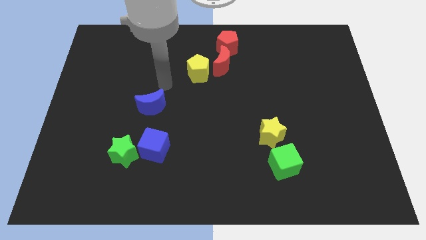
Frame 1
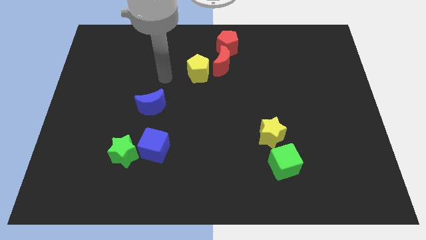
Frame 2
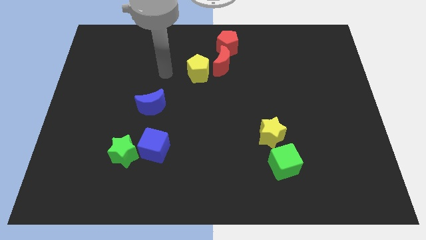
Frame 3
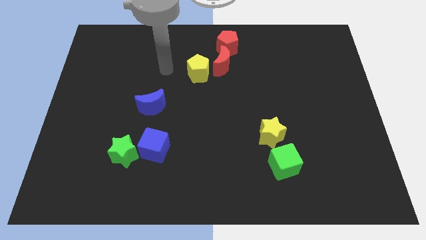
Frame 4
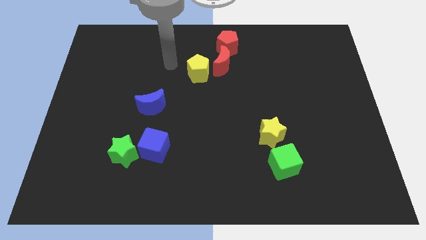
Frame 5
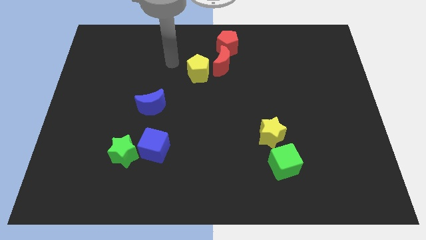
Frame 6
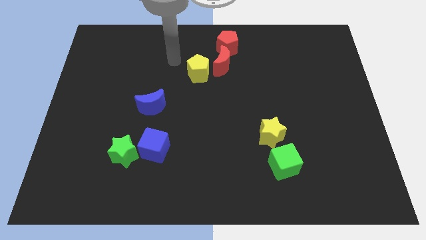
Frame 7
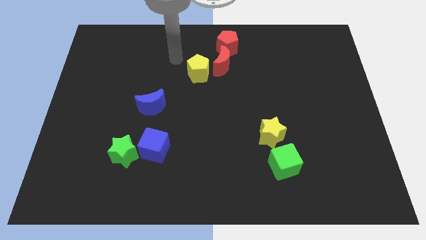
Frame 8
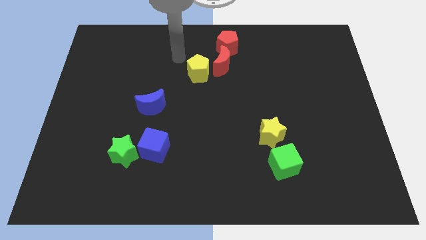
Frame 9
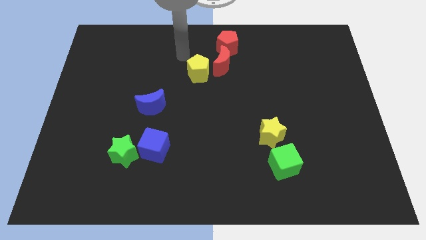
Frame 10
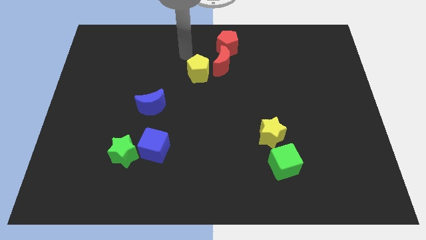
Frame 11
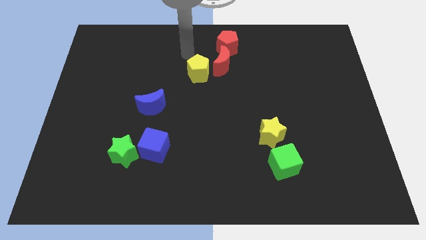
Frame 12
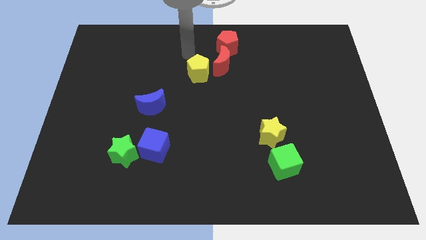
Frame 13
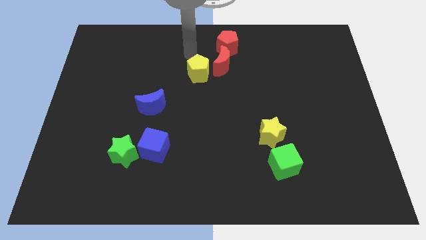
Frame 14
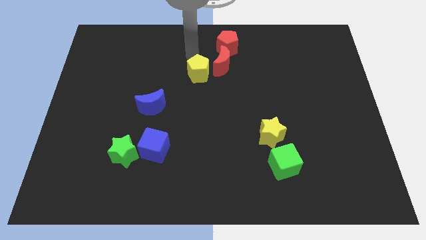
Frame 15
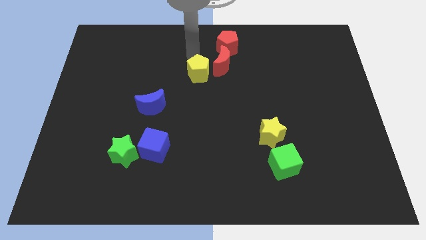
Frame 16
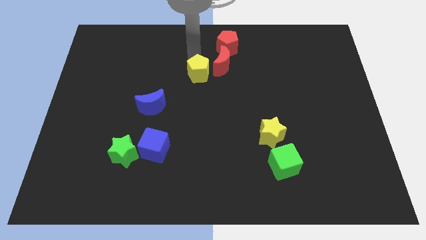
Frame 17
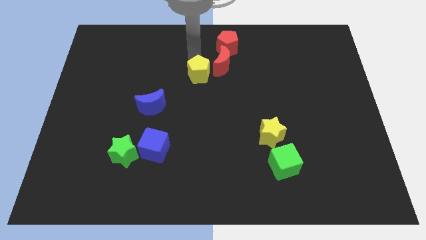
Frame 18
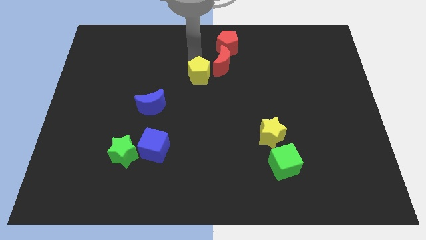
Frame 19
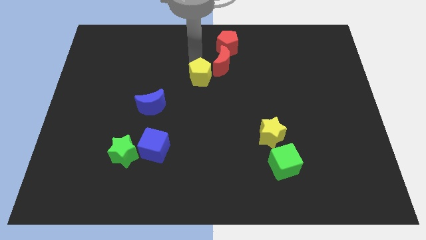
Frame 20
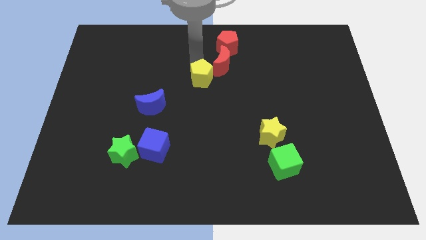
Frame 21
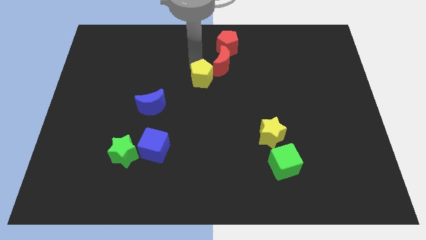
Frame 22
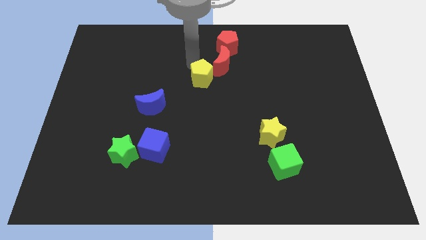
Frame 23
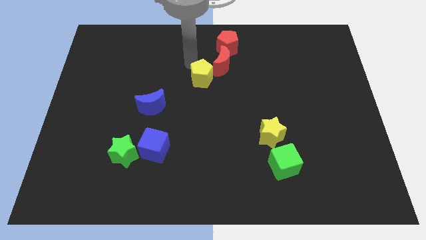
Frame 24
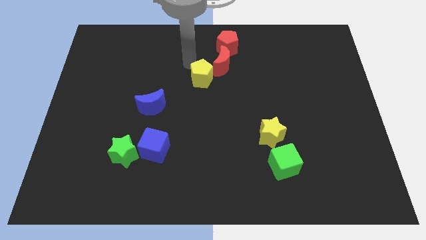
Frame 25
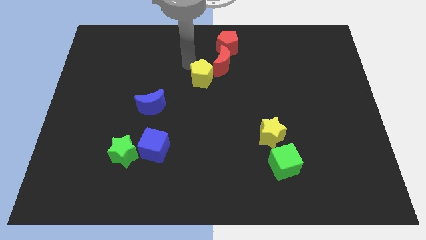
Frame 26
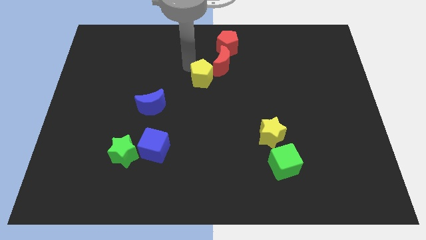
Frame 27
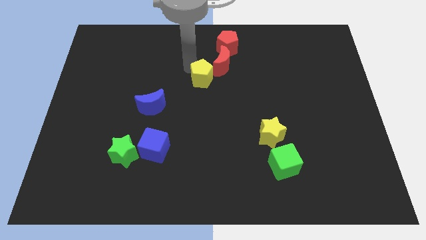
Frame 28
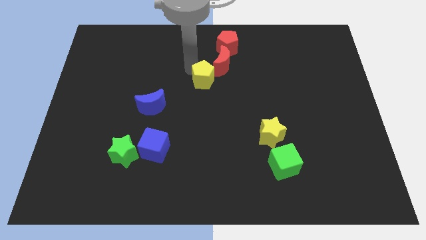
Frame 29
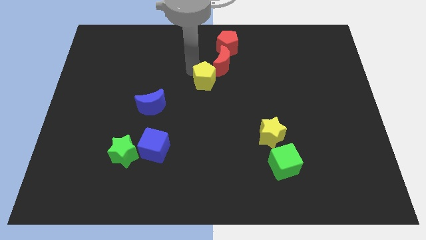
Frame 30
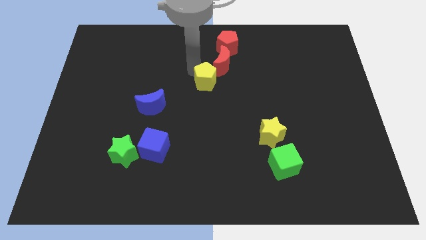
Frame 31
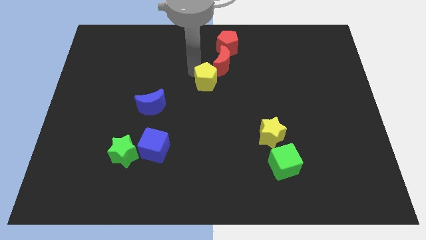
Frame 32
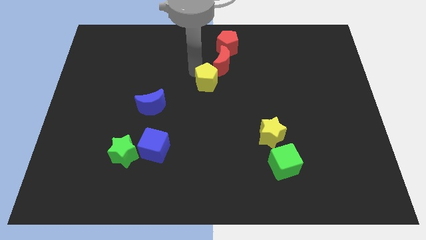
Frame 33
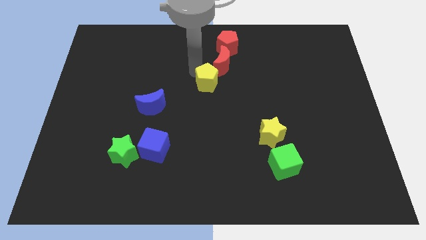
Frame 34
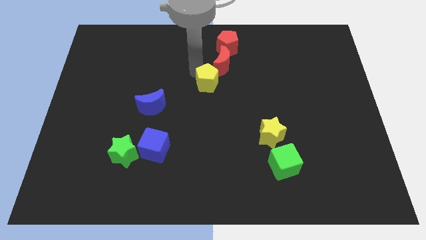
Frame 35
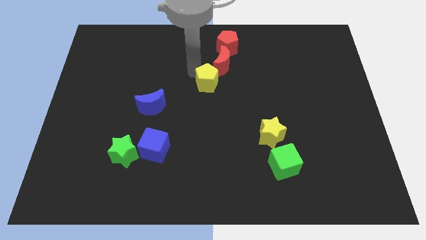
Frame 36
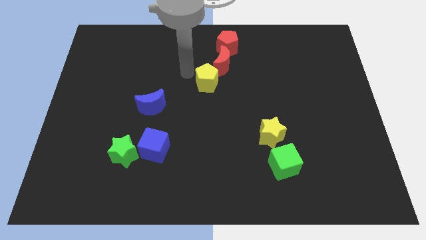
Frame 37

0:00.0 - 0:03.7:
slide the yellow pentagon to the bottom left side of the red moon

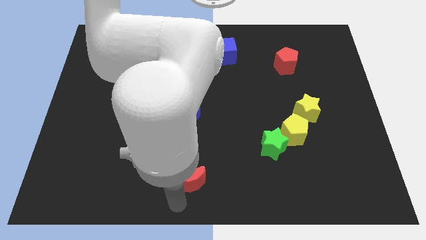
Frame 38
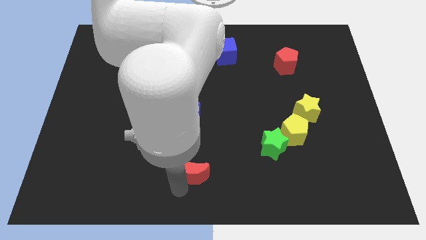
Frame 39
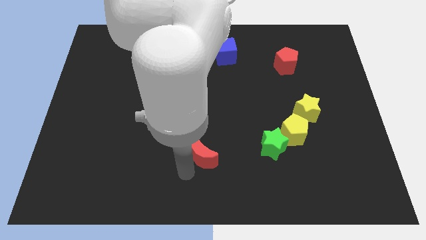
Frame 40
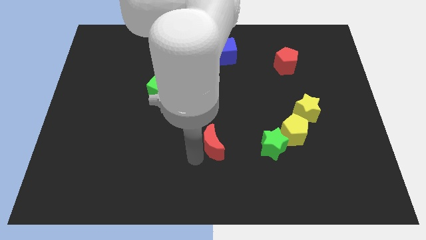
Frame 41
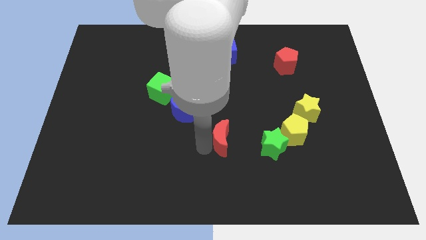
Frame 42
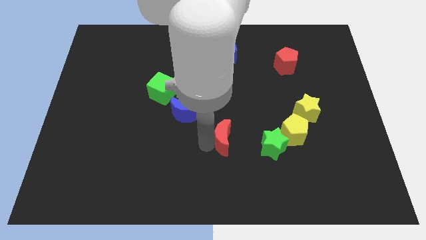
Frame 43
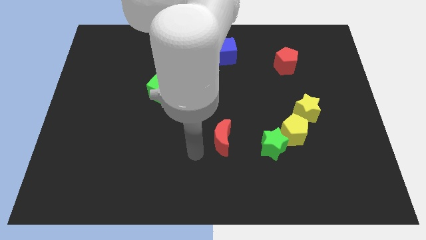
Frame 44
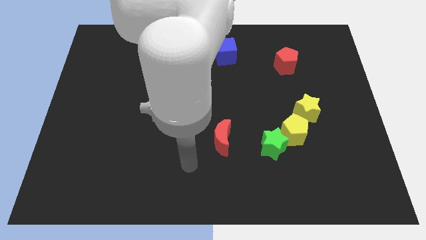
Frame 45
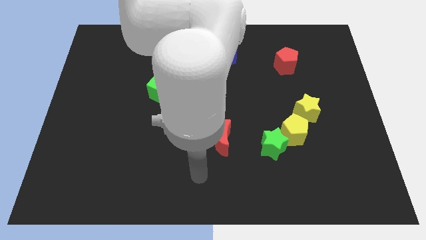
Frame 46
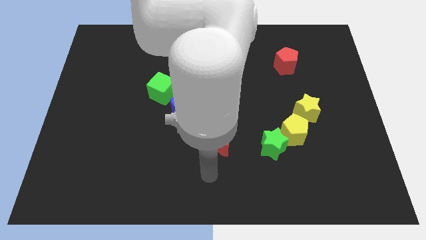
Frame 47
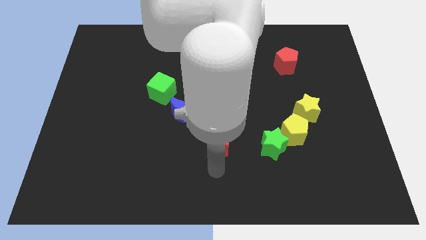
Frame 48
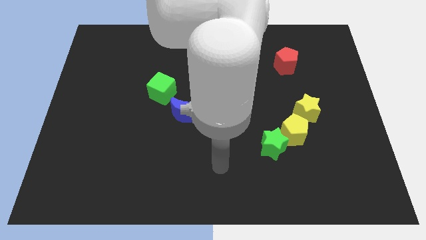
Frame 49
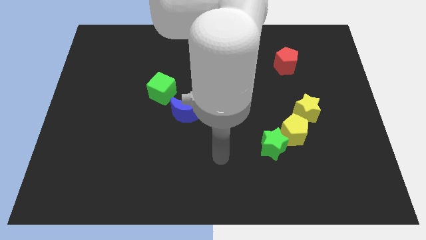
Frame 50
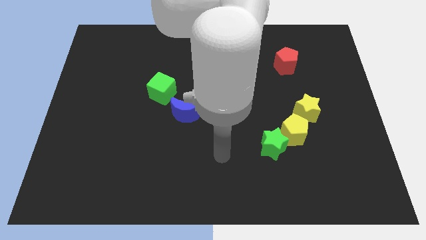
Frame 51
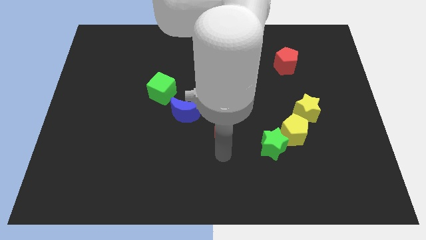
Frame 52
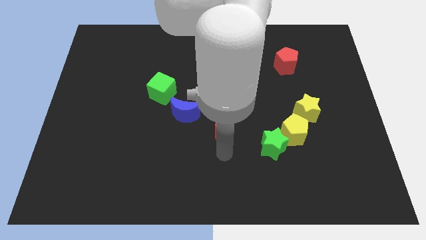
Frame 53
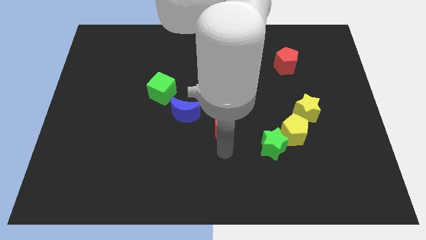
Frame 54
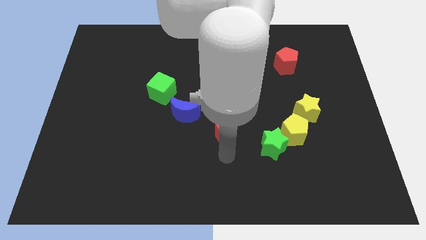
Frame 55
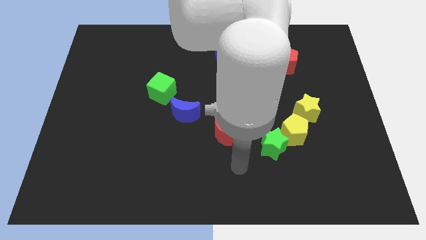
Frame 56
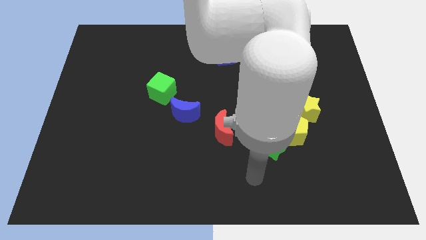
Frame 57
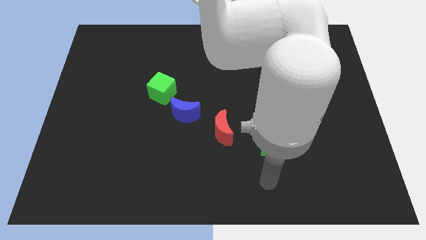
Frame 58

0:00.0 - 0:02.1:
move red moon to the bottom right of blue moon

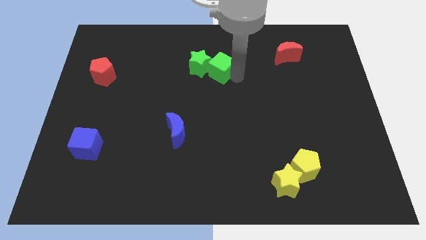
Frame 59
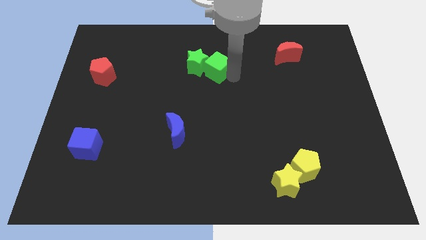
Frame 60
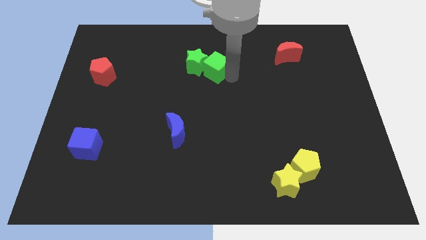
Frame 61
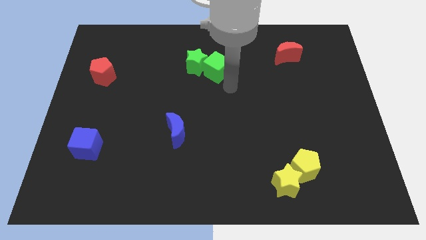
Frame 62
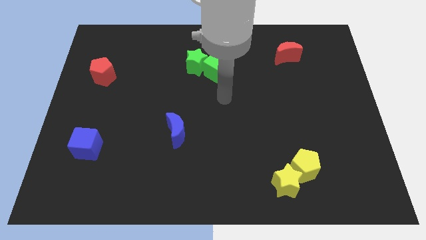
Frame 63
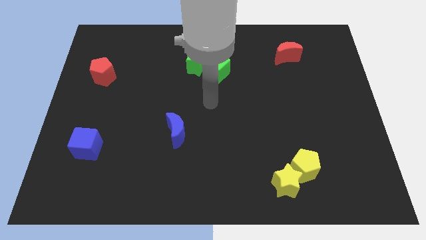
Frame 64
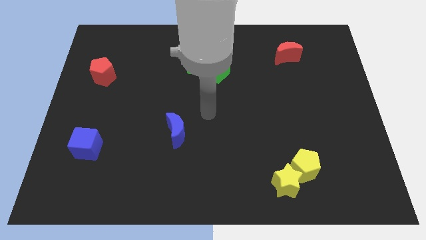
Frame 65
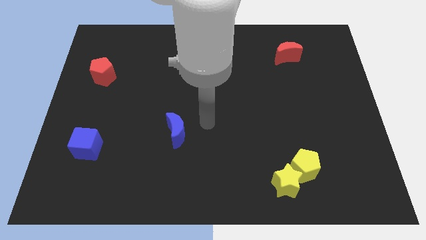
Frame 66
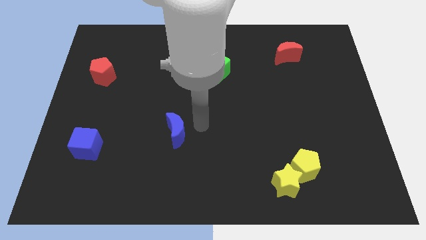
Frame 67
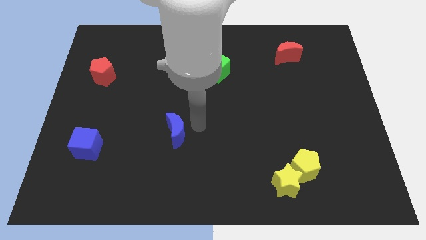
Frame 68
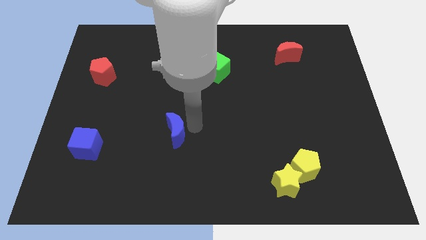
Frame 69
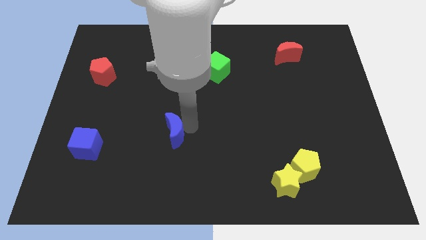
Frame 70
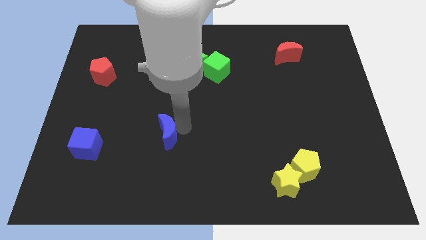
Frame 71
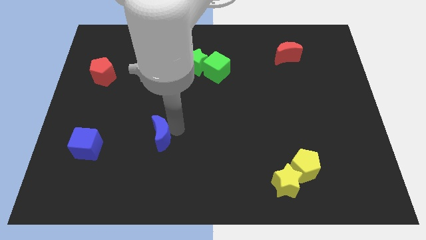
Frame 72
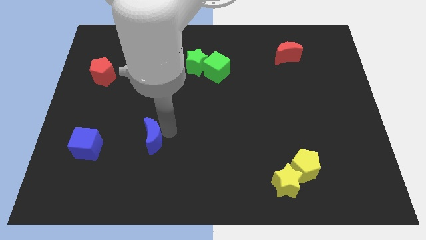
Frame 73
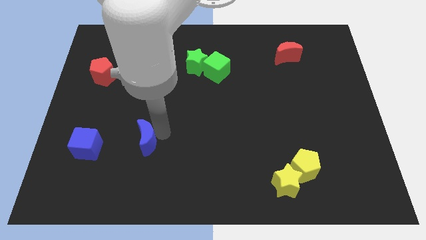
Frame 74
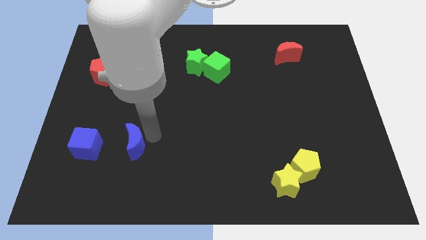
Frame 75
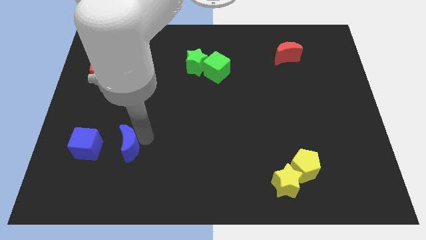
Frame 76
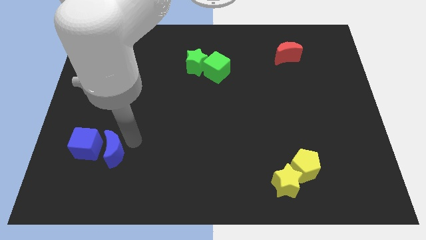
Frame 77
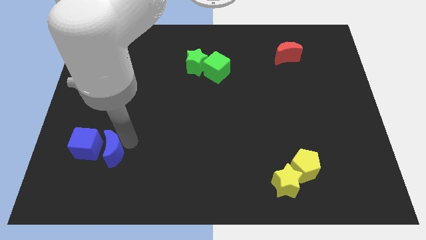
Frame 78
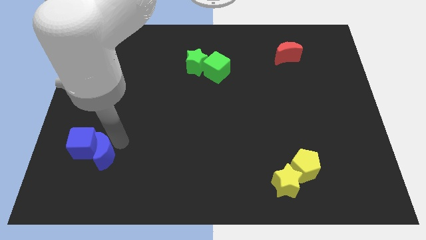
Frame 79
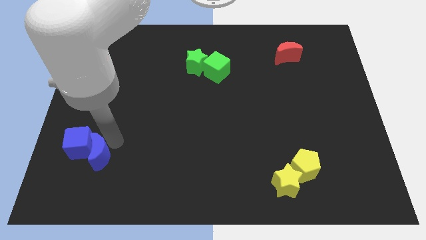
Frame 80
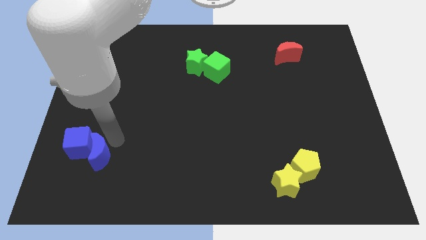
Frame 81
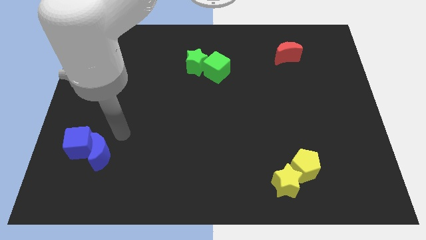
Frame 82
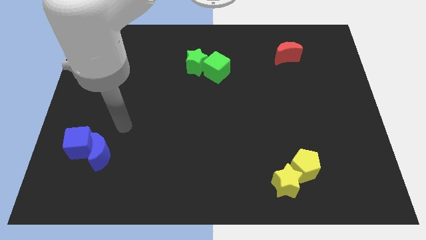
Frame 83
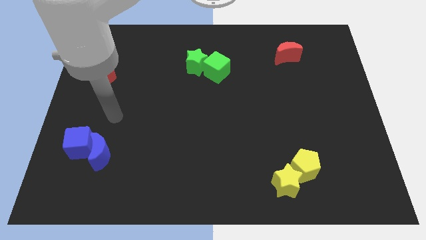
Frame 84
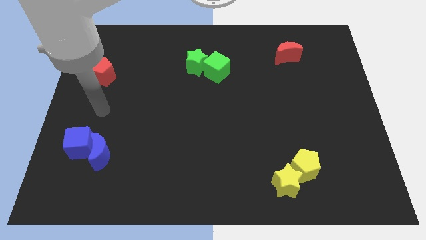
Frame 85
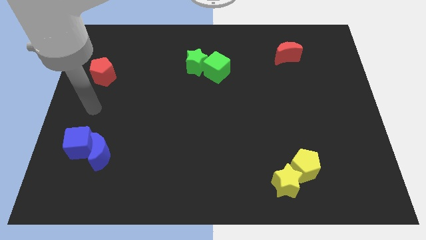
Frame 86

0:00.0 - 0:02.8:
group up the blue blocks at the left side of the table

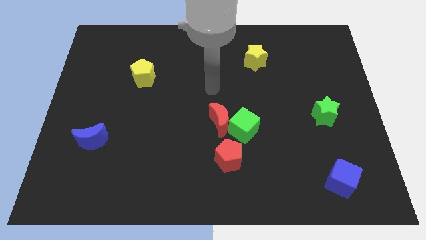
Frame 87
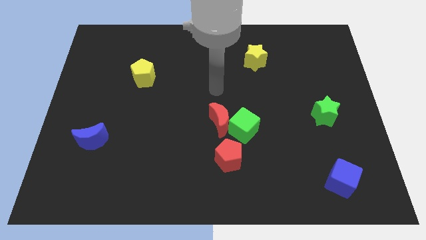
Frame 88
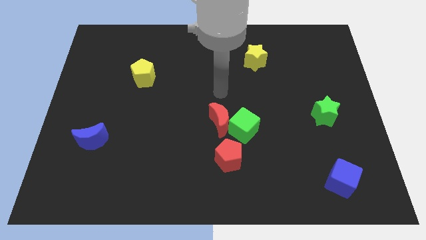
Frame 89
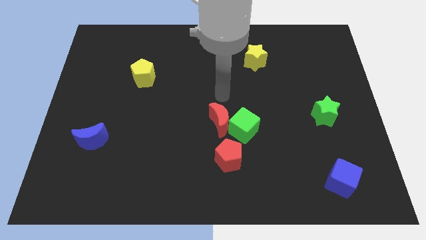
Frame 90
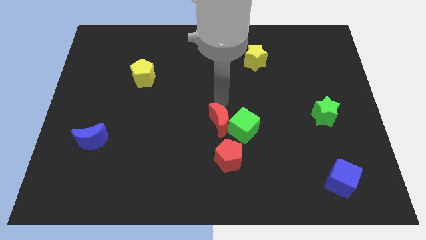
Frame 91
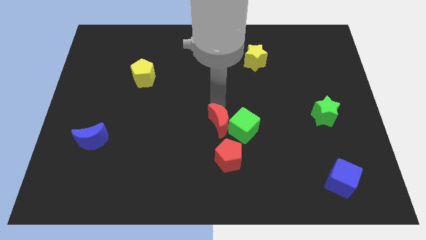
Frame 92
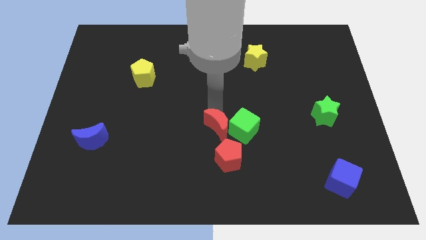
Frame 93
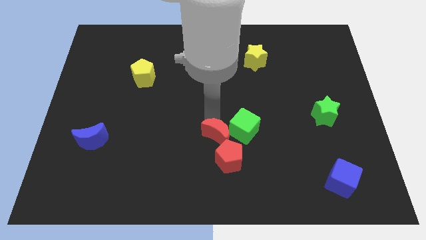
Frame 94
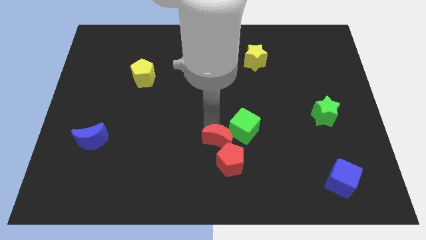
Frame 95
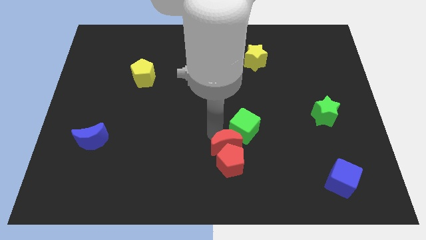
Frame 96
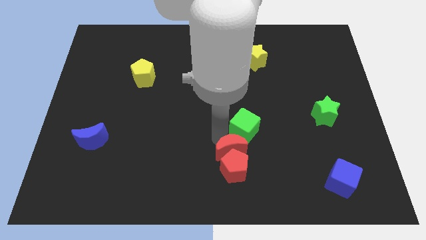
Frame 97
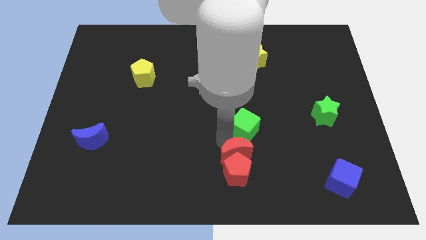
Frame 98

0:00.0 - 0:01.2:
push the red moon into the red pentagon
